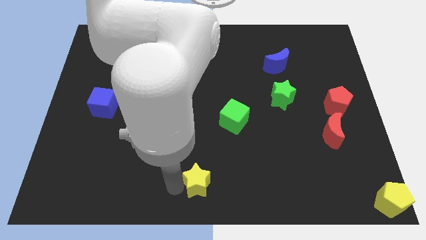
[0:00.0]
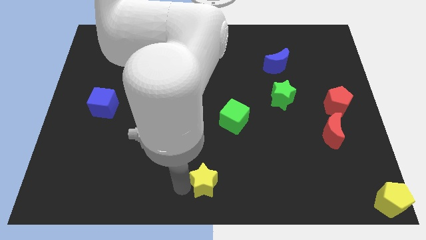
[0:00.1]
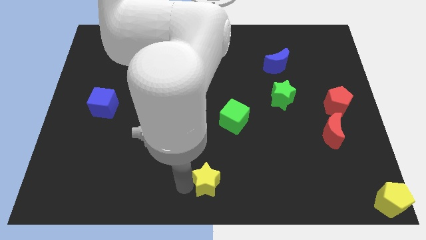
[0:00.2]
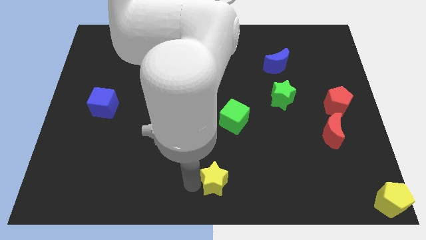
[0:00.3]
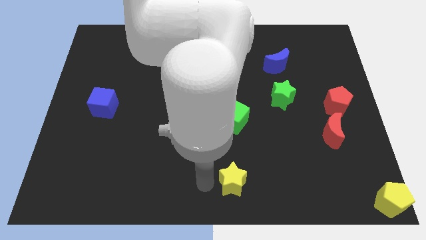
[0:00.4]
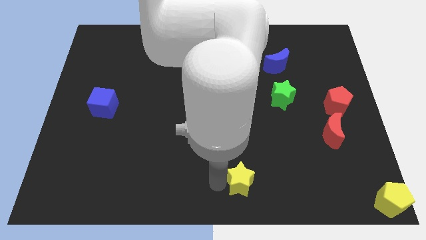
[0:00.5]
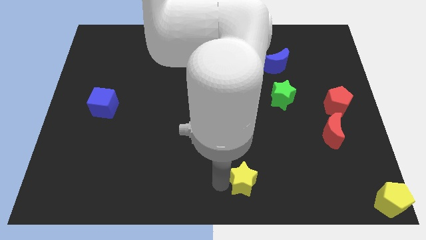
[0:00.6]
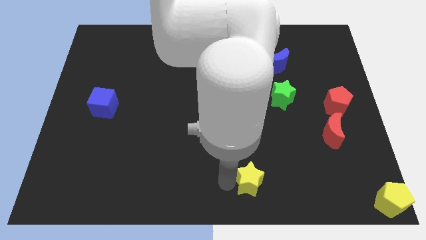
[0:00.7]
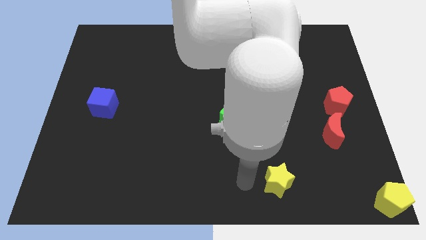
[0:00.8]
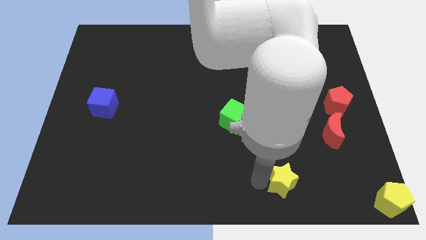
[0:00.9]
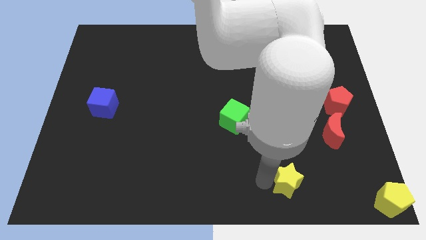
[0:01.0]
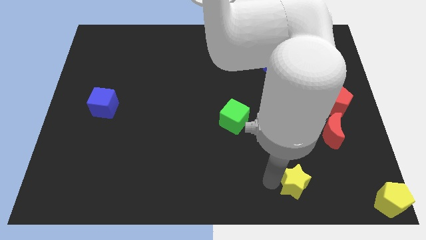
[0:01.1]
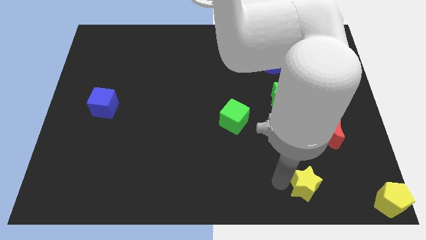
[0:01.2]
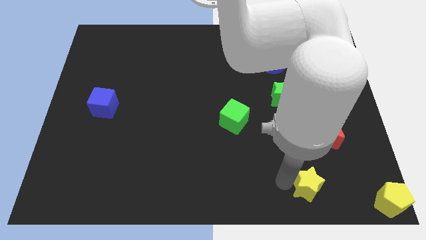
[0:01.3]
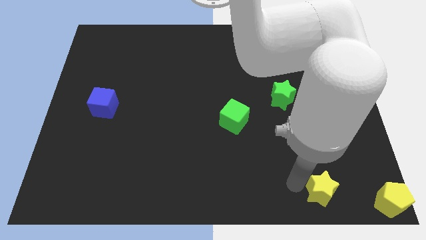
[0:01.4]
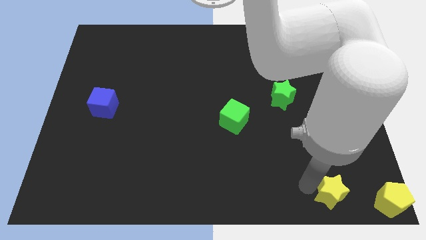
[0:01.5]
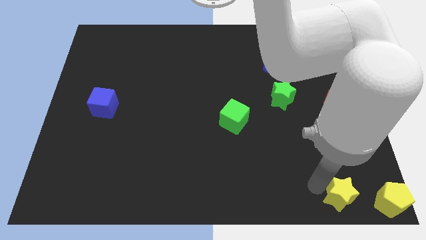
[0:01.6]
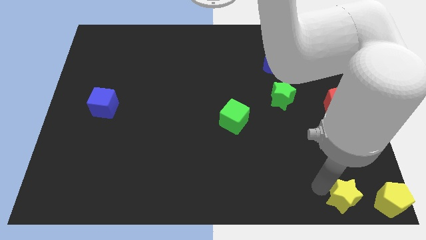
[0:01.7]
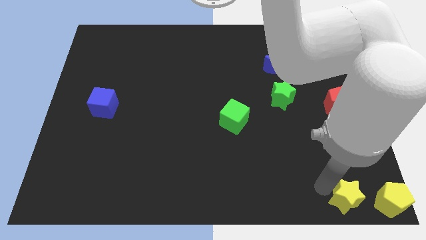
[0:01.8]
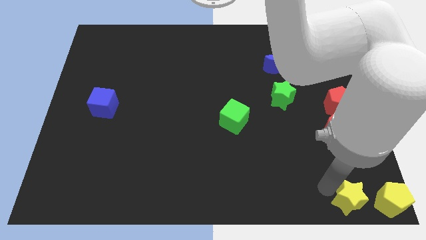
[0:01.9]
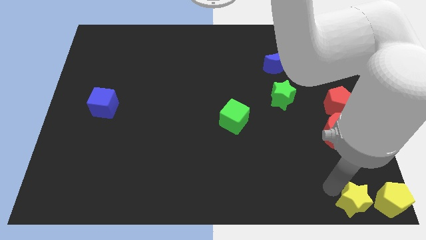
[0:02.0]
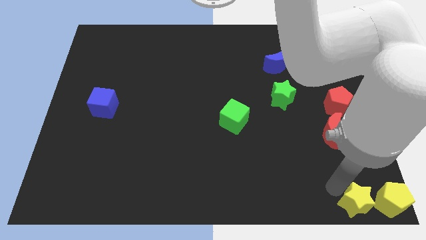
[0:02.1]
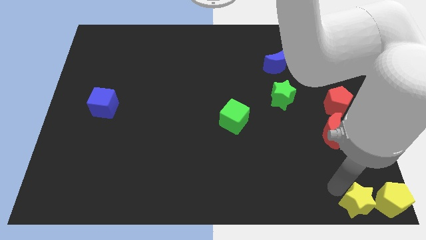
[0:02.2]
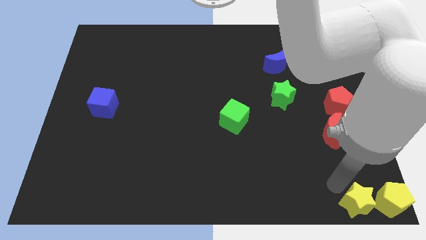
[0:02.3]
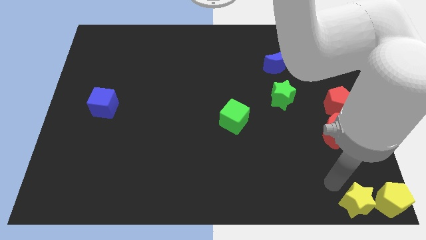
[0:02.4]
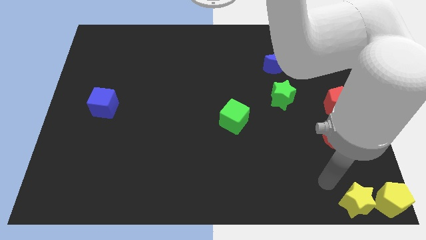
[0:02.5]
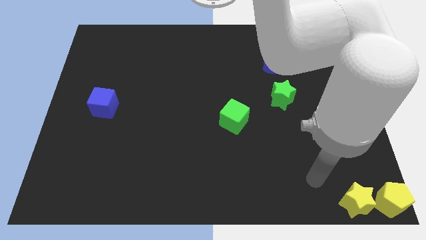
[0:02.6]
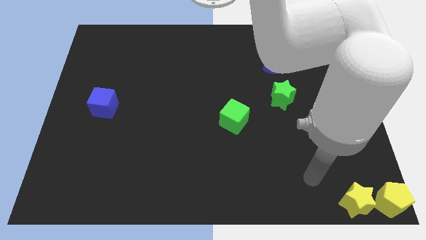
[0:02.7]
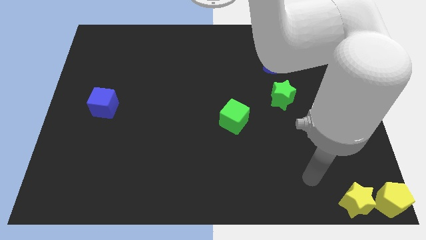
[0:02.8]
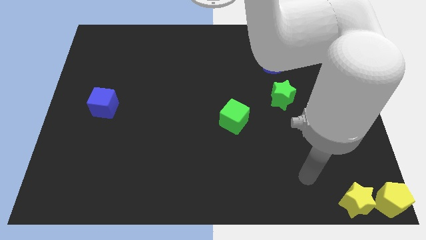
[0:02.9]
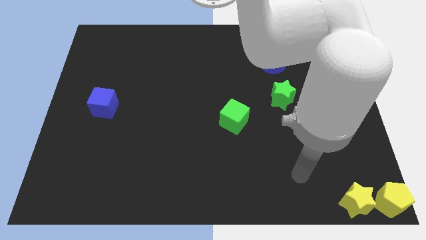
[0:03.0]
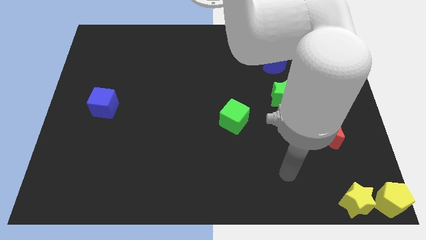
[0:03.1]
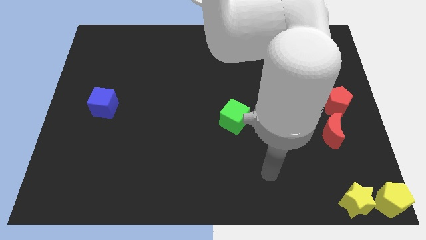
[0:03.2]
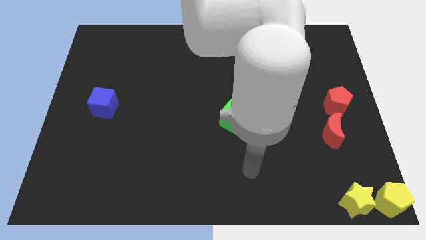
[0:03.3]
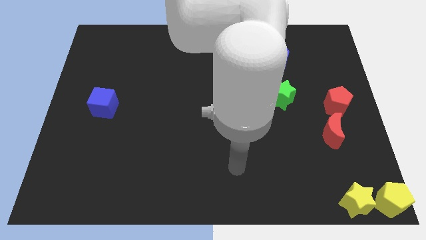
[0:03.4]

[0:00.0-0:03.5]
slide the yellow star vertically to the bottom of the red moon

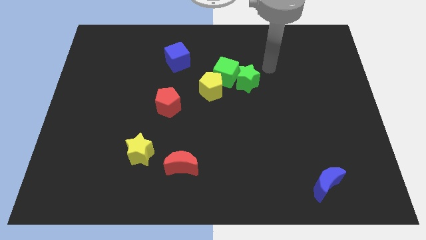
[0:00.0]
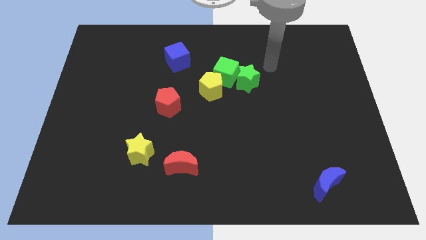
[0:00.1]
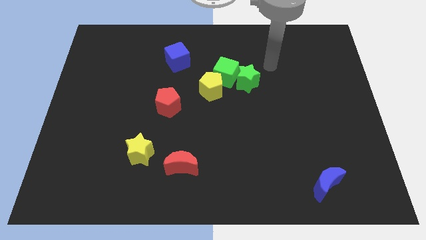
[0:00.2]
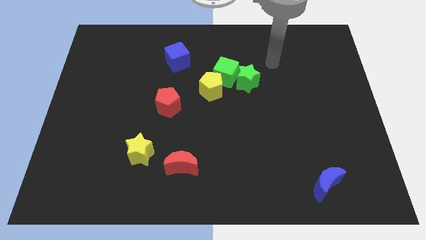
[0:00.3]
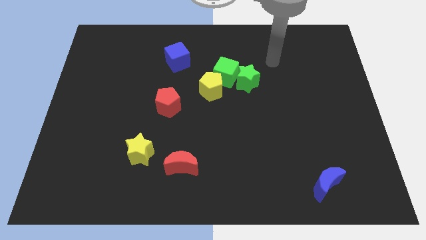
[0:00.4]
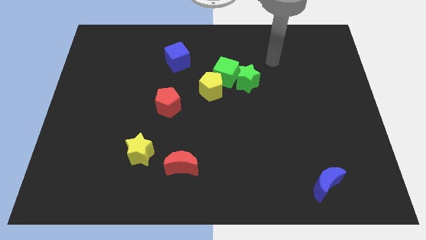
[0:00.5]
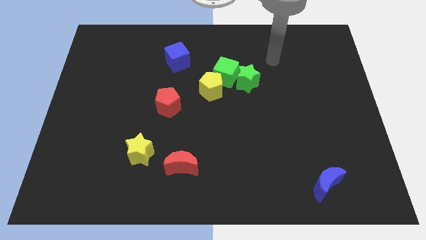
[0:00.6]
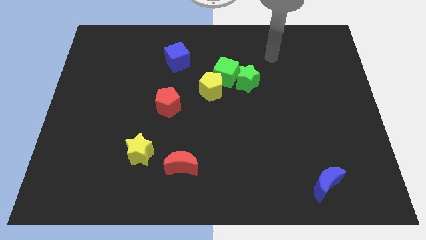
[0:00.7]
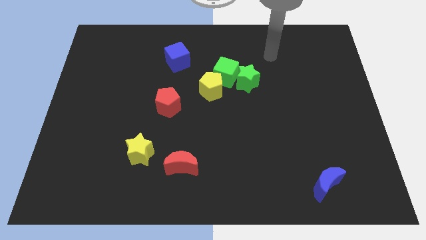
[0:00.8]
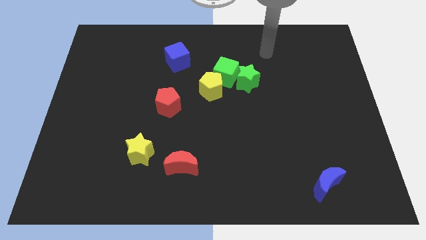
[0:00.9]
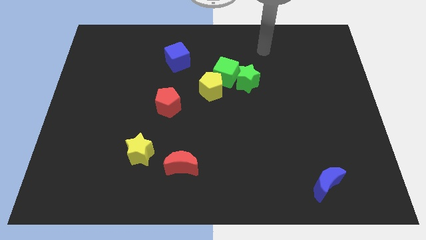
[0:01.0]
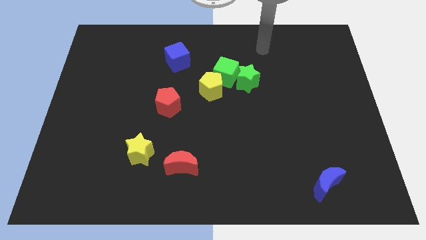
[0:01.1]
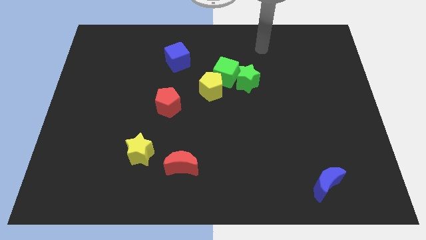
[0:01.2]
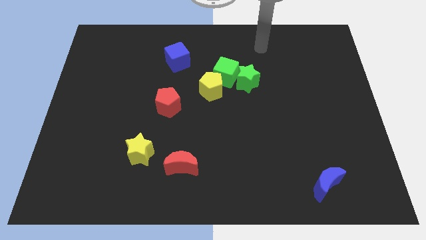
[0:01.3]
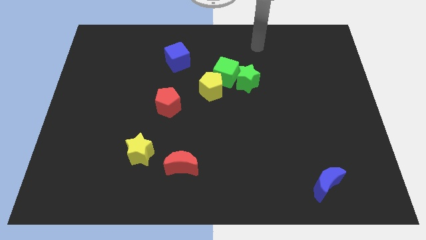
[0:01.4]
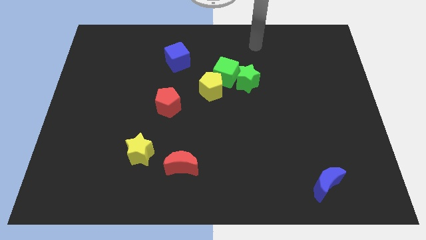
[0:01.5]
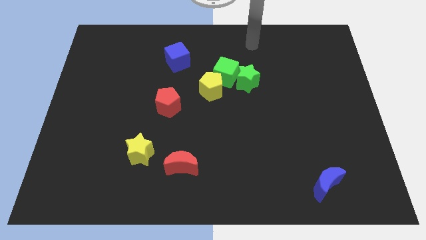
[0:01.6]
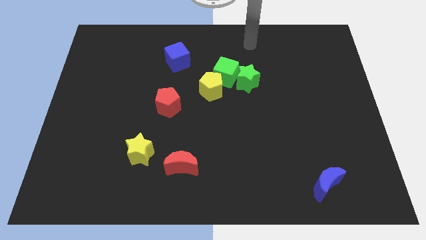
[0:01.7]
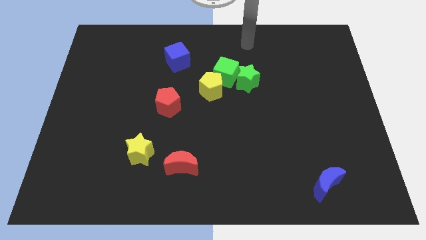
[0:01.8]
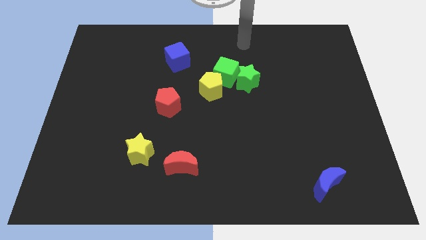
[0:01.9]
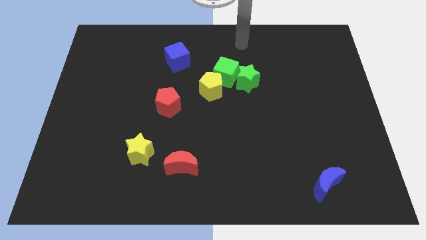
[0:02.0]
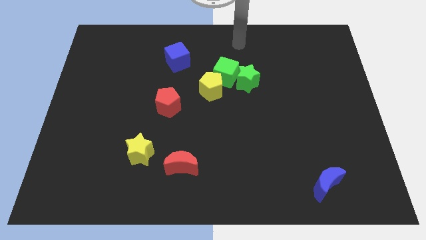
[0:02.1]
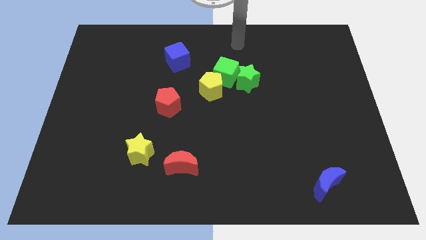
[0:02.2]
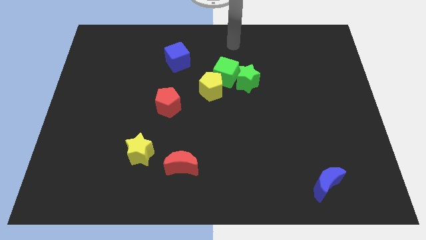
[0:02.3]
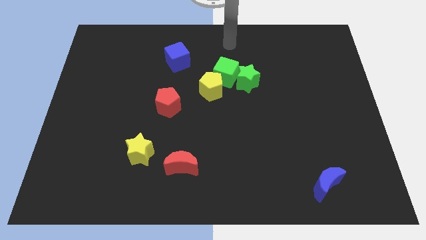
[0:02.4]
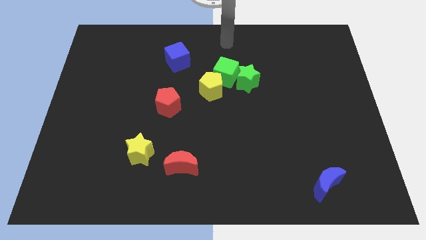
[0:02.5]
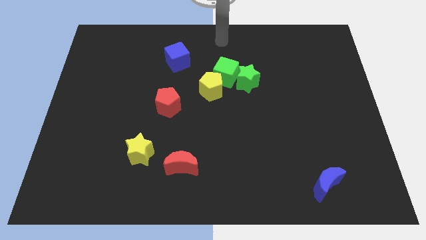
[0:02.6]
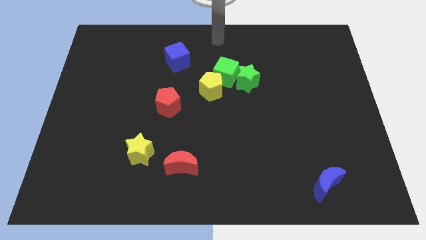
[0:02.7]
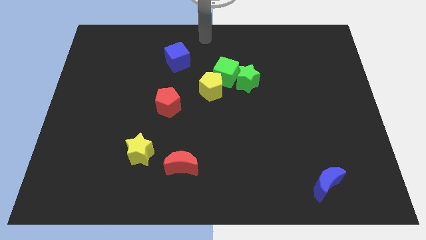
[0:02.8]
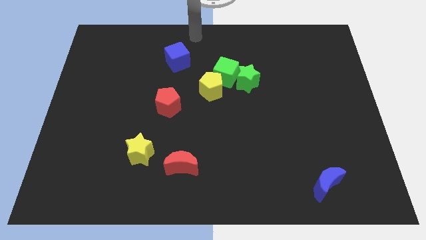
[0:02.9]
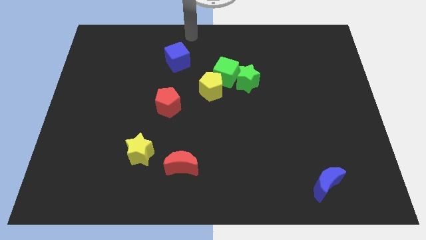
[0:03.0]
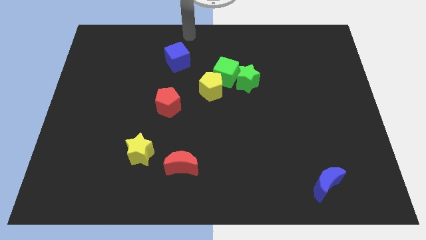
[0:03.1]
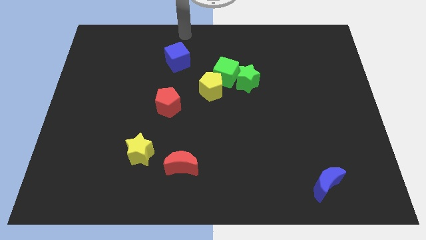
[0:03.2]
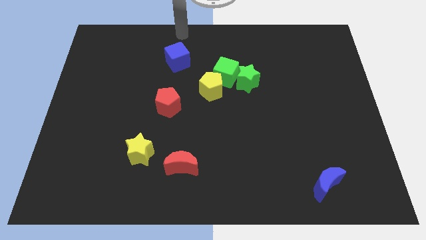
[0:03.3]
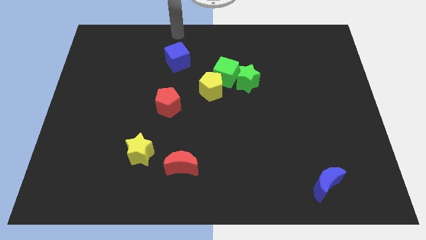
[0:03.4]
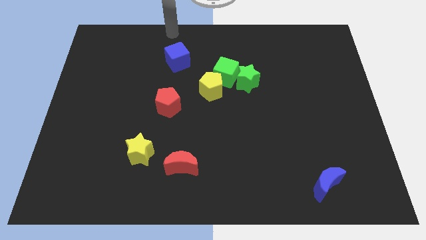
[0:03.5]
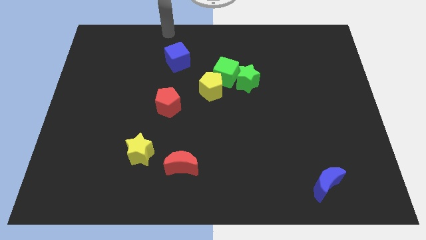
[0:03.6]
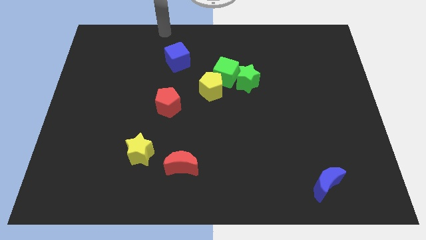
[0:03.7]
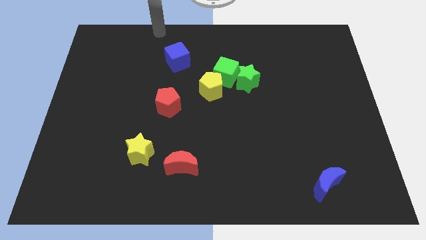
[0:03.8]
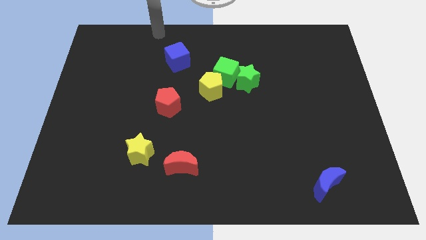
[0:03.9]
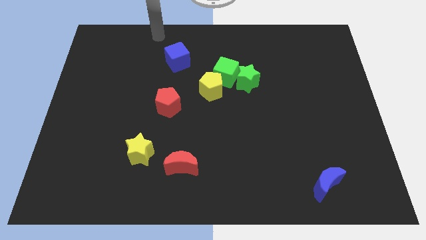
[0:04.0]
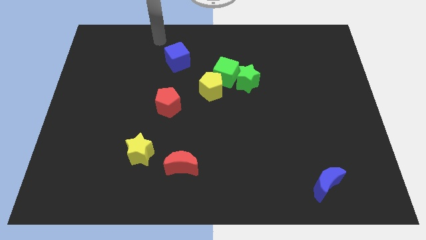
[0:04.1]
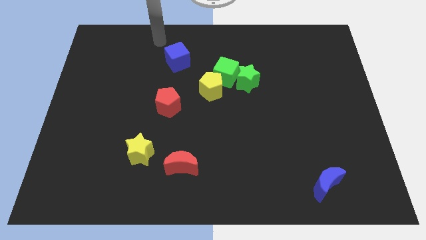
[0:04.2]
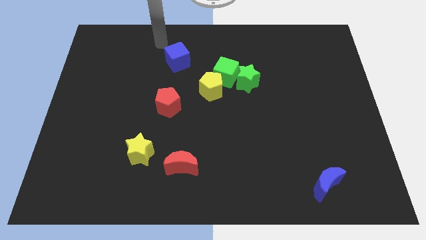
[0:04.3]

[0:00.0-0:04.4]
move your arm from the green star to the blue cube

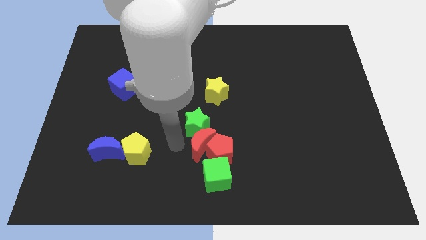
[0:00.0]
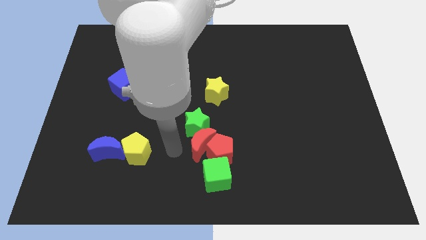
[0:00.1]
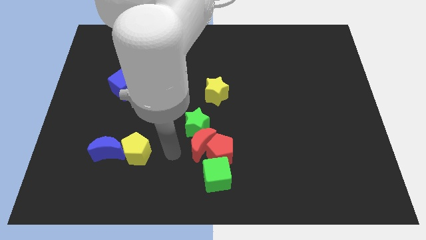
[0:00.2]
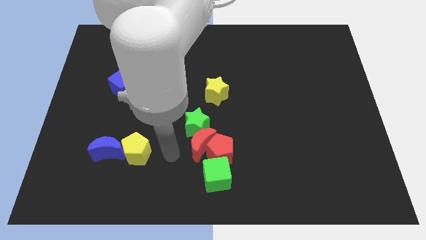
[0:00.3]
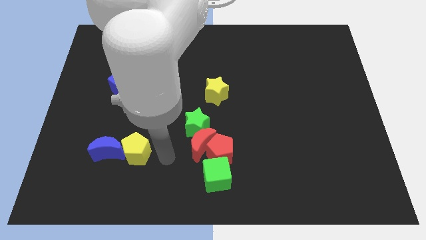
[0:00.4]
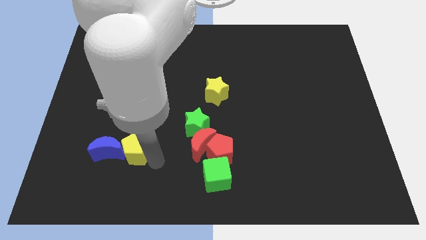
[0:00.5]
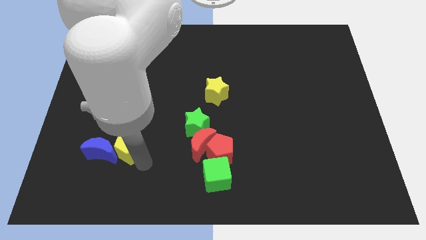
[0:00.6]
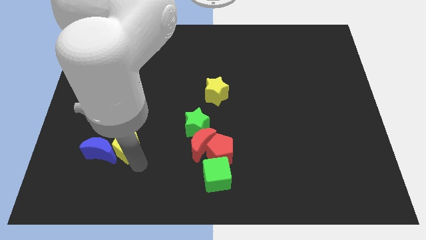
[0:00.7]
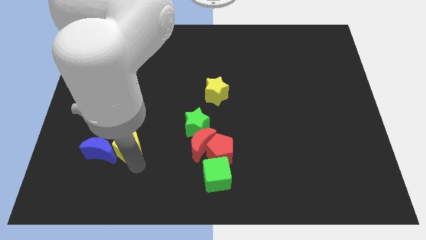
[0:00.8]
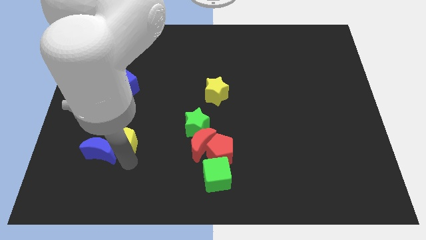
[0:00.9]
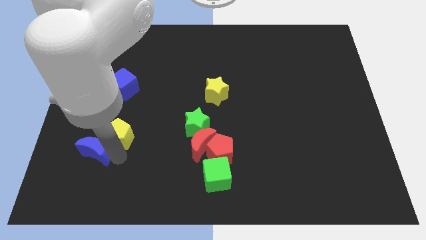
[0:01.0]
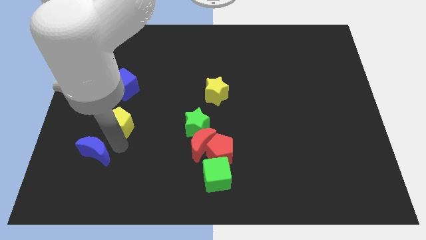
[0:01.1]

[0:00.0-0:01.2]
move the yellow pentagon towards the blue cube
